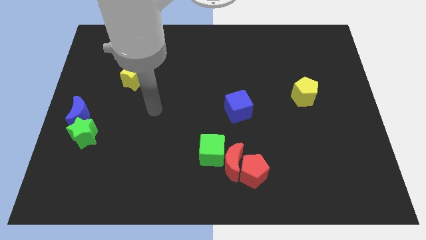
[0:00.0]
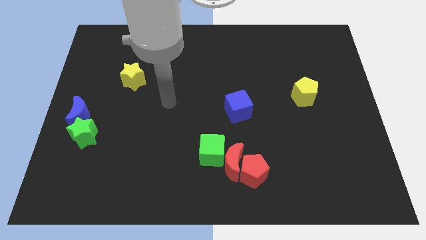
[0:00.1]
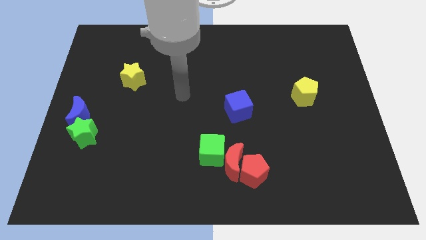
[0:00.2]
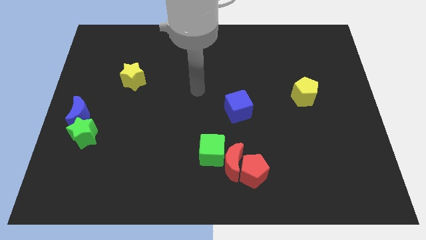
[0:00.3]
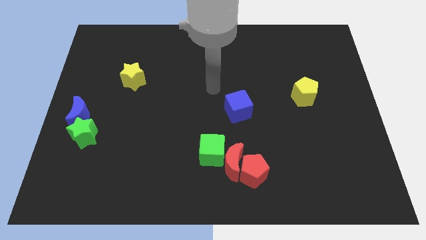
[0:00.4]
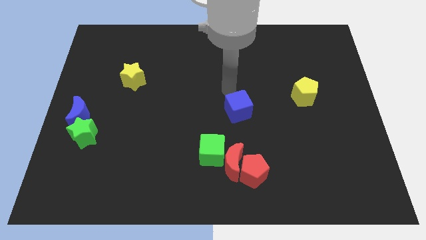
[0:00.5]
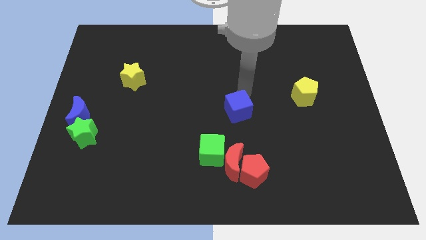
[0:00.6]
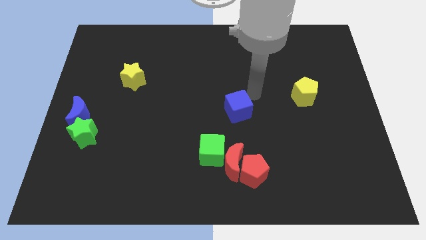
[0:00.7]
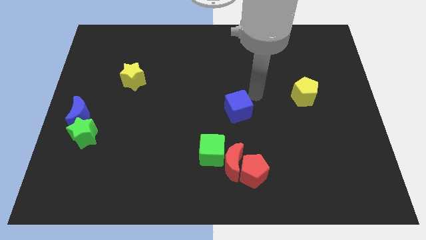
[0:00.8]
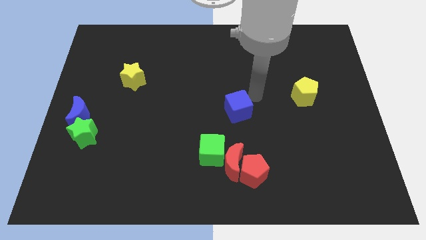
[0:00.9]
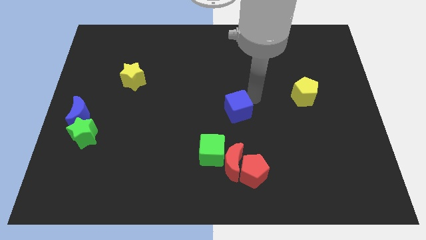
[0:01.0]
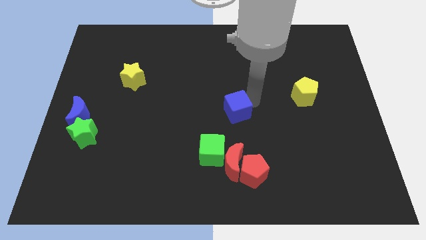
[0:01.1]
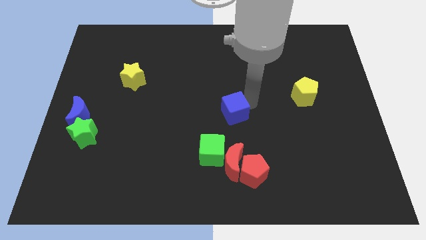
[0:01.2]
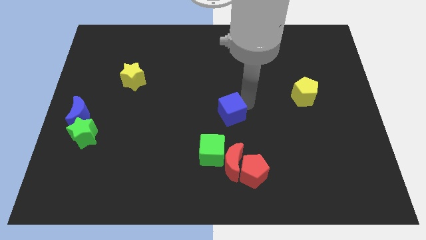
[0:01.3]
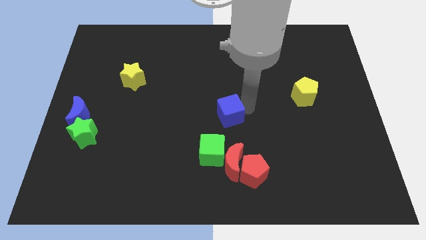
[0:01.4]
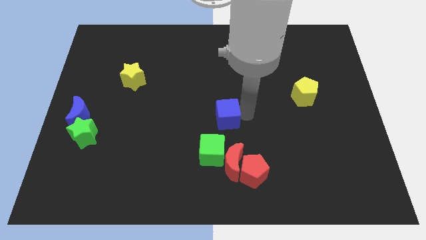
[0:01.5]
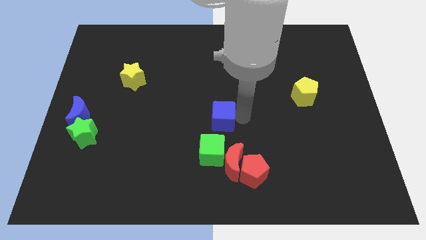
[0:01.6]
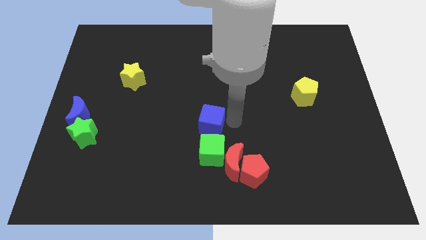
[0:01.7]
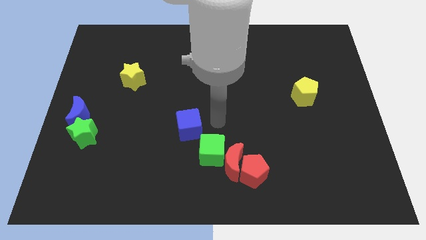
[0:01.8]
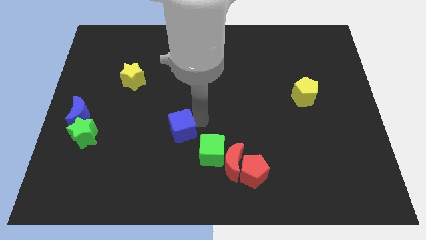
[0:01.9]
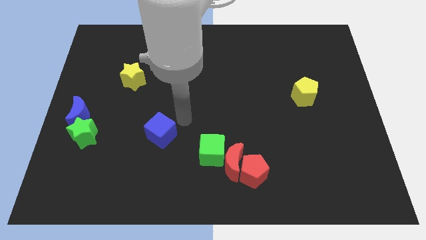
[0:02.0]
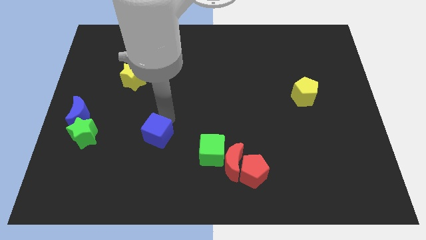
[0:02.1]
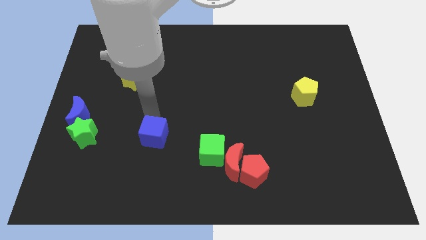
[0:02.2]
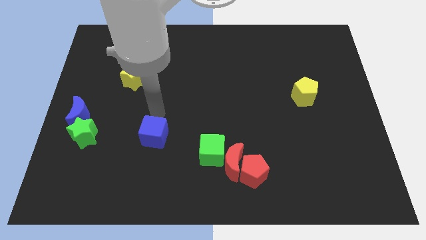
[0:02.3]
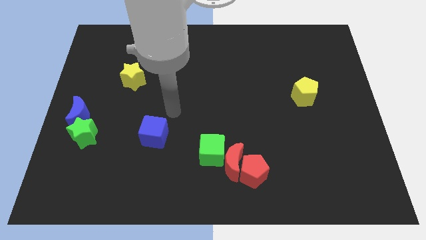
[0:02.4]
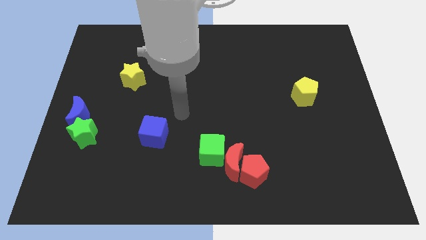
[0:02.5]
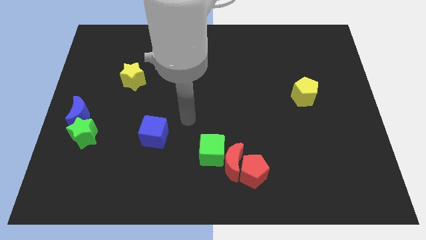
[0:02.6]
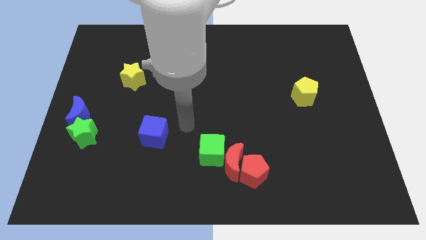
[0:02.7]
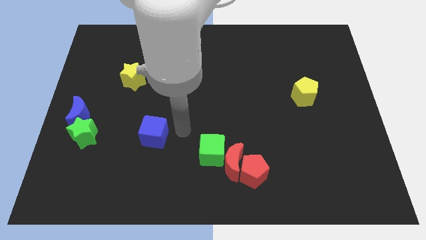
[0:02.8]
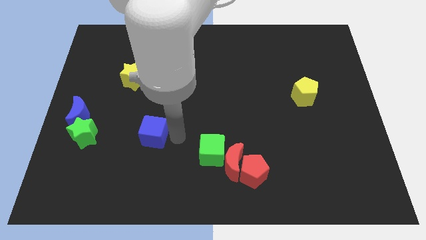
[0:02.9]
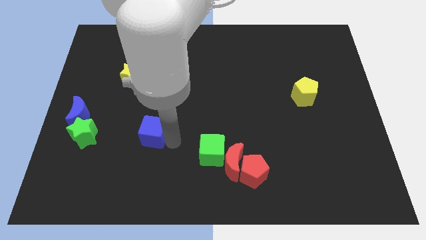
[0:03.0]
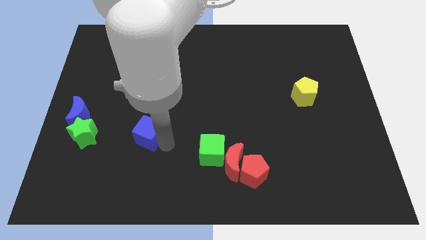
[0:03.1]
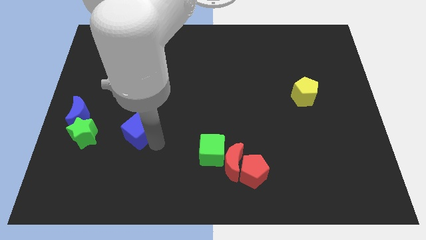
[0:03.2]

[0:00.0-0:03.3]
move the blue cube to the right of green star

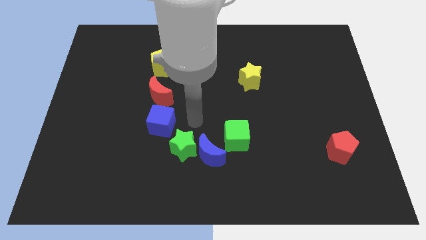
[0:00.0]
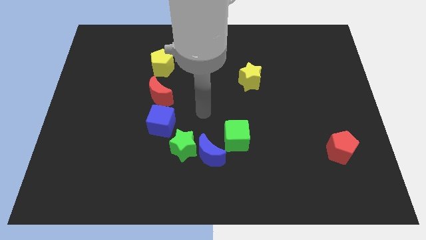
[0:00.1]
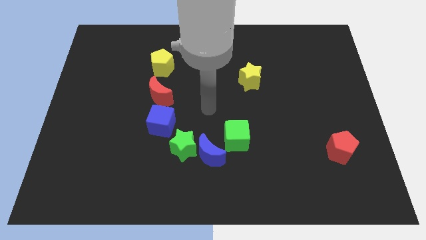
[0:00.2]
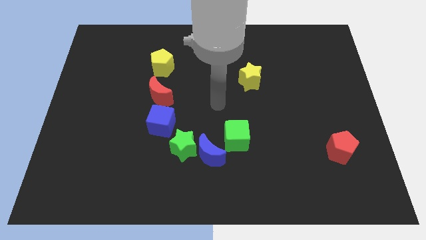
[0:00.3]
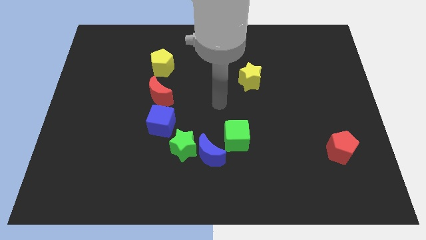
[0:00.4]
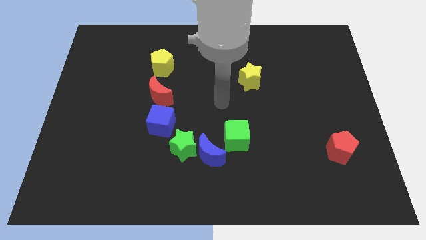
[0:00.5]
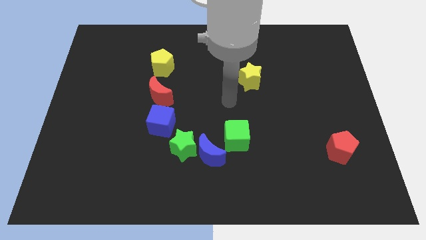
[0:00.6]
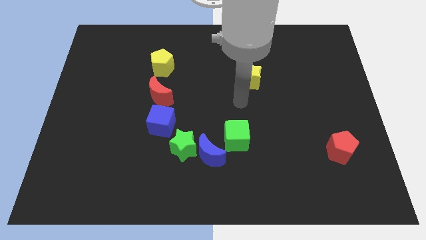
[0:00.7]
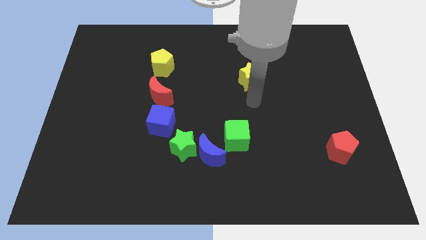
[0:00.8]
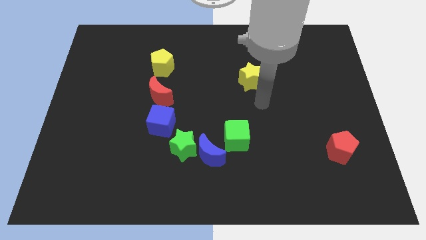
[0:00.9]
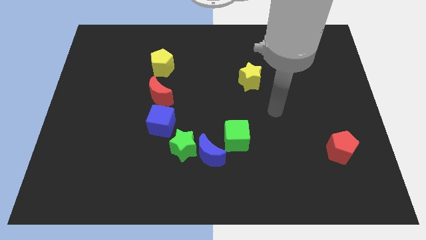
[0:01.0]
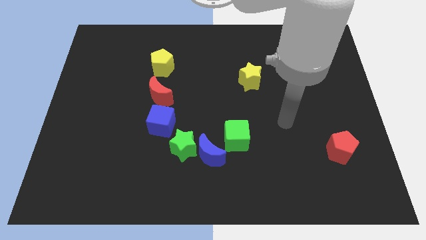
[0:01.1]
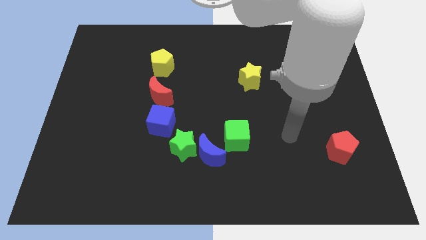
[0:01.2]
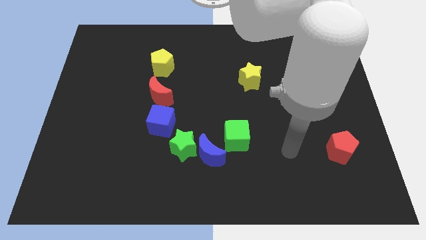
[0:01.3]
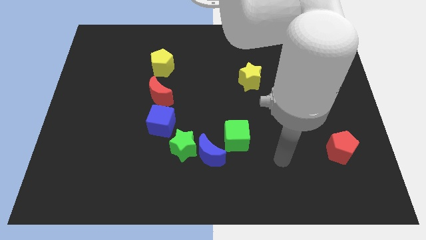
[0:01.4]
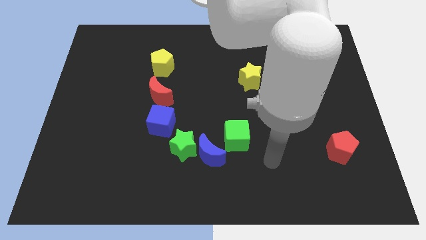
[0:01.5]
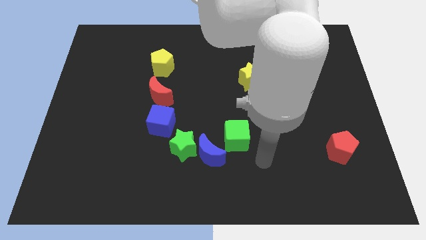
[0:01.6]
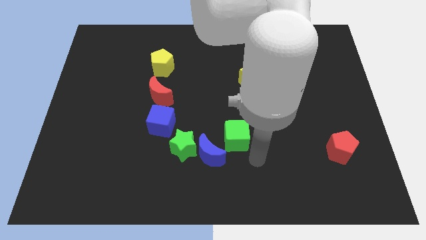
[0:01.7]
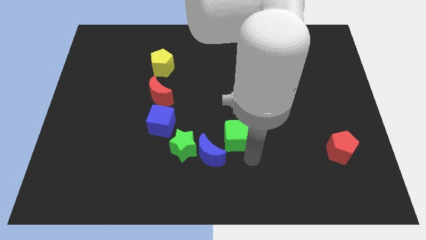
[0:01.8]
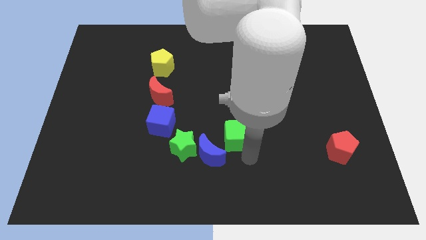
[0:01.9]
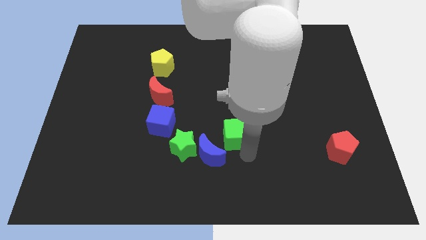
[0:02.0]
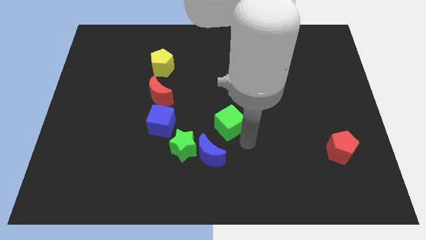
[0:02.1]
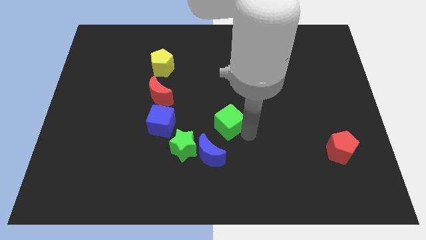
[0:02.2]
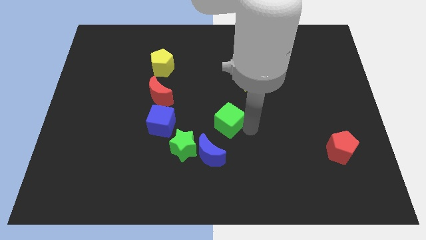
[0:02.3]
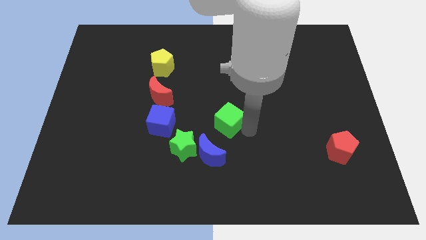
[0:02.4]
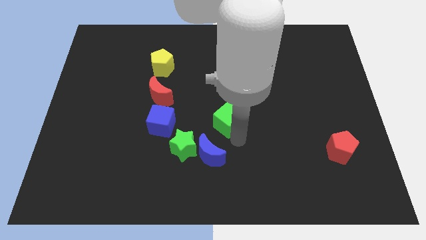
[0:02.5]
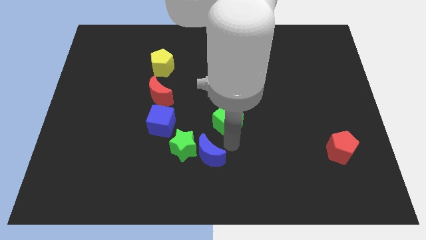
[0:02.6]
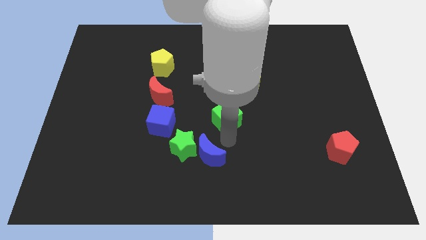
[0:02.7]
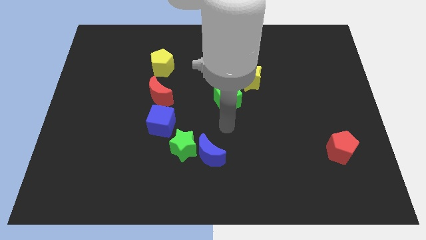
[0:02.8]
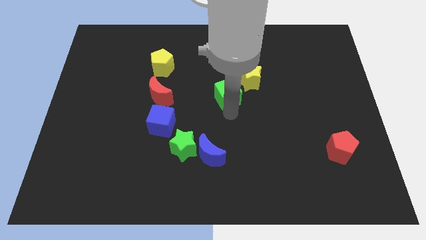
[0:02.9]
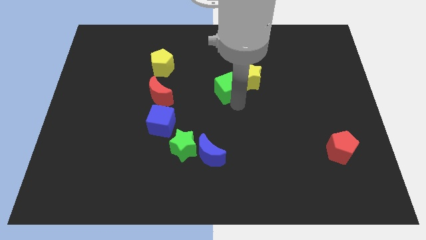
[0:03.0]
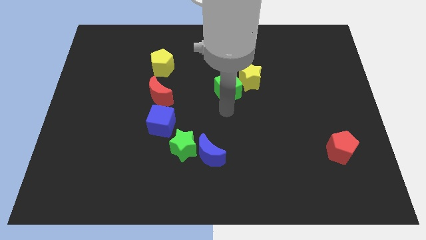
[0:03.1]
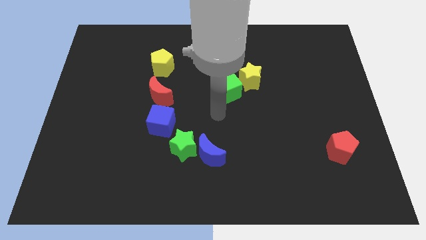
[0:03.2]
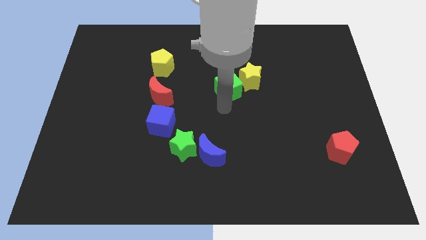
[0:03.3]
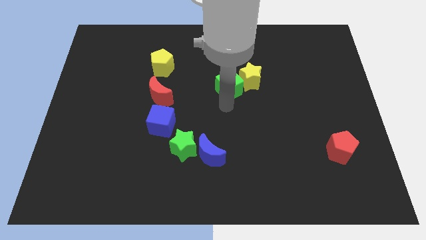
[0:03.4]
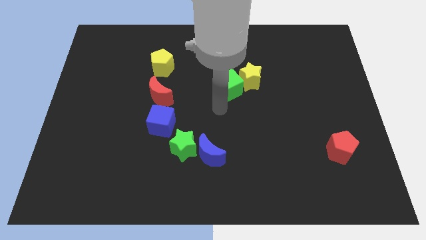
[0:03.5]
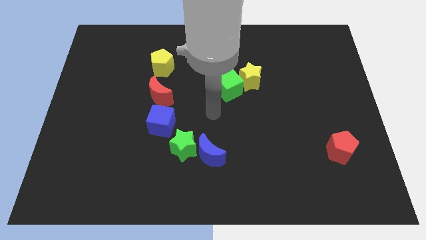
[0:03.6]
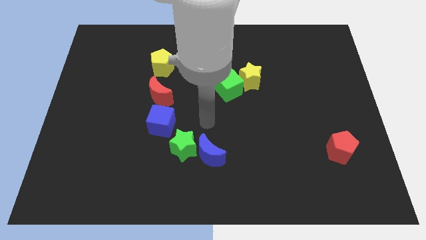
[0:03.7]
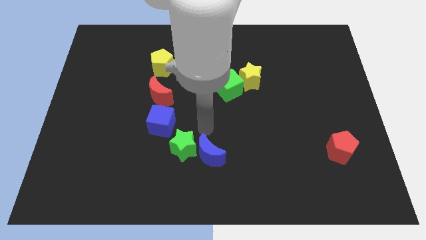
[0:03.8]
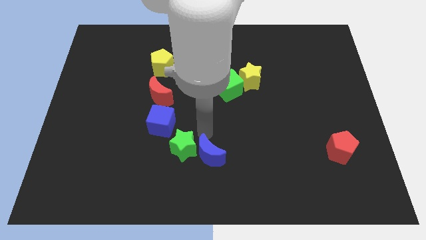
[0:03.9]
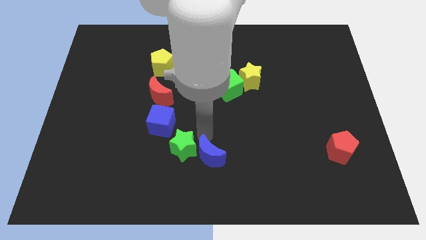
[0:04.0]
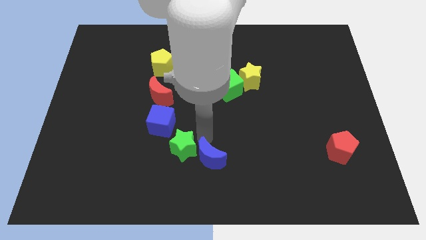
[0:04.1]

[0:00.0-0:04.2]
move the green cube to the left of the yellow star

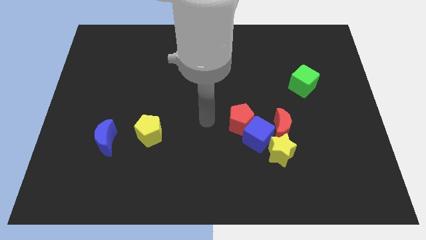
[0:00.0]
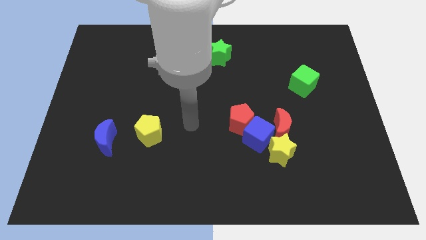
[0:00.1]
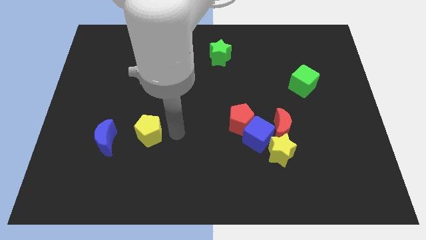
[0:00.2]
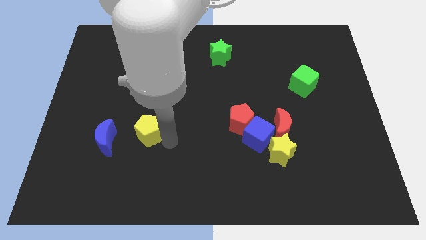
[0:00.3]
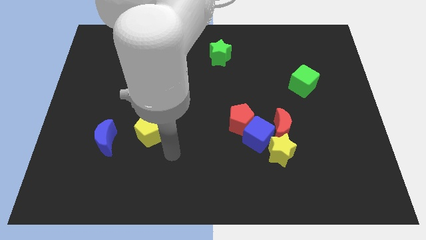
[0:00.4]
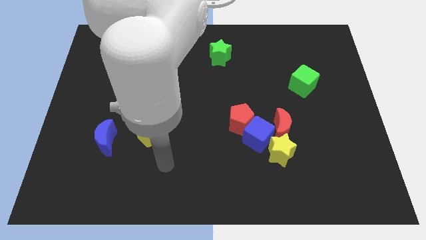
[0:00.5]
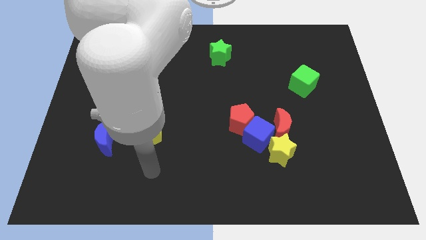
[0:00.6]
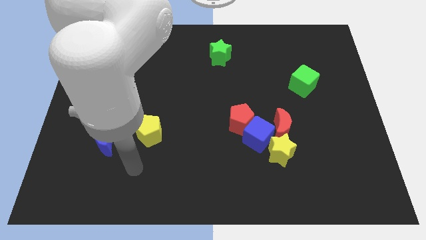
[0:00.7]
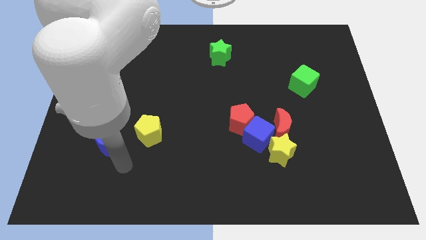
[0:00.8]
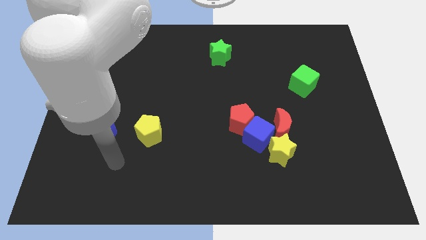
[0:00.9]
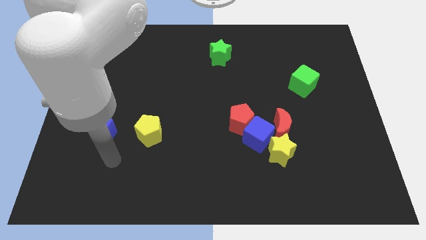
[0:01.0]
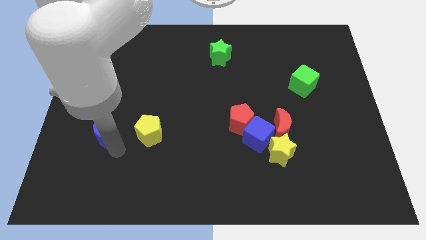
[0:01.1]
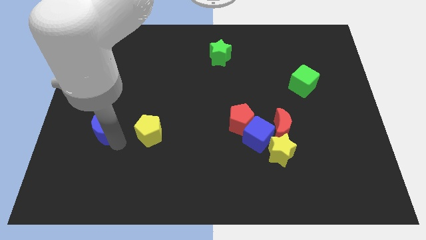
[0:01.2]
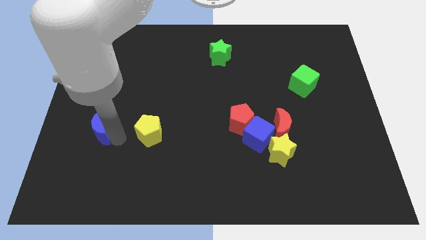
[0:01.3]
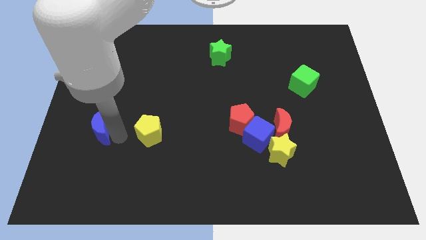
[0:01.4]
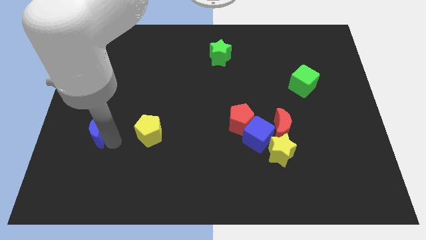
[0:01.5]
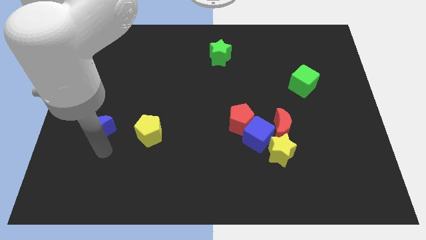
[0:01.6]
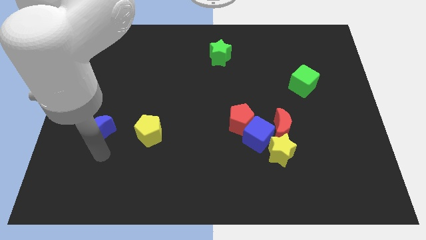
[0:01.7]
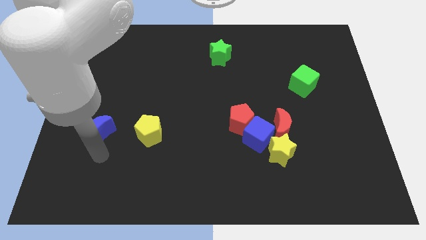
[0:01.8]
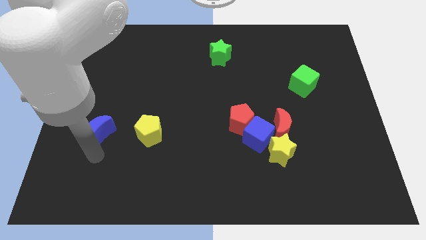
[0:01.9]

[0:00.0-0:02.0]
slightly push the blue moon
